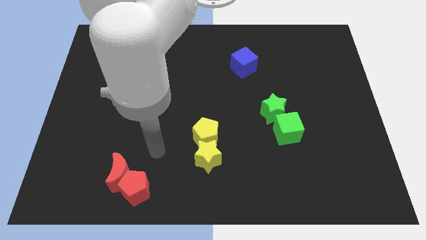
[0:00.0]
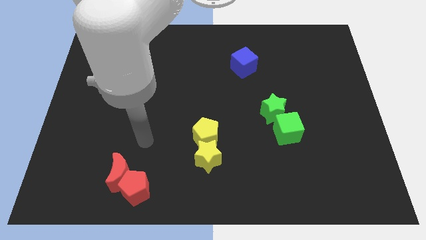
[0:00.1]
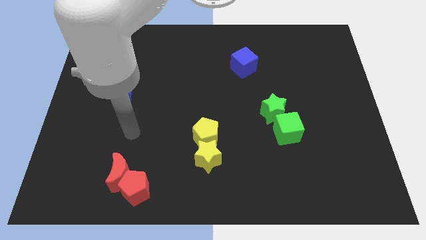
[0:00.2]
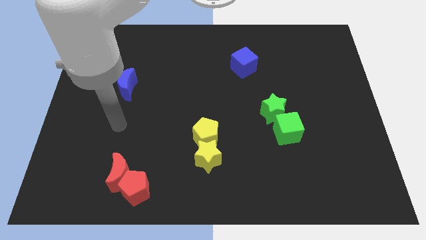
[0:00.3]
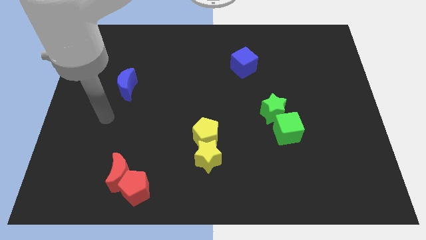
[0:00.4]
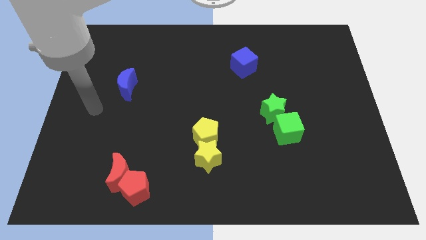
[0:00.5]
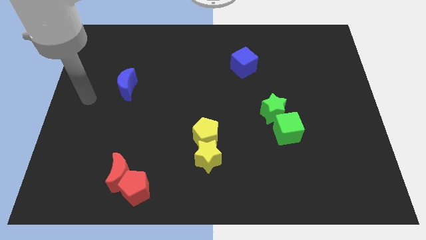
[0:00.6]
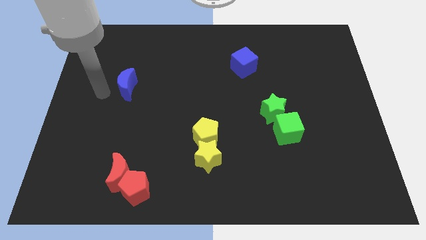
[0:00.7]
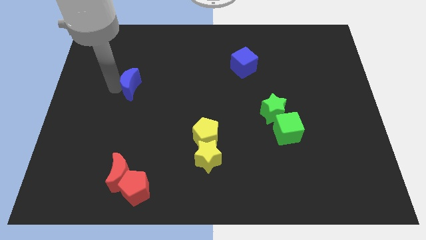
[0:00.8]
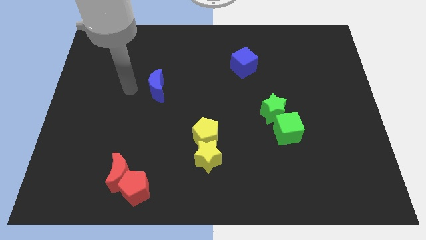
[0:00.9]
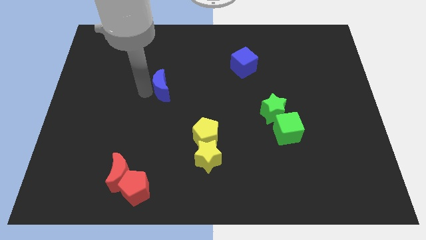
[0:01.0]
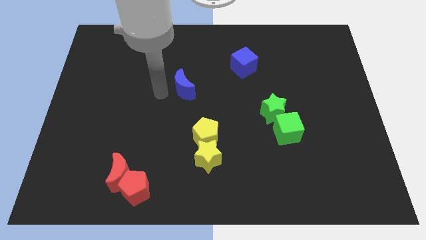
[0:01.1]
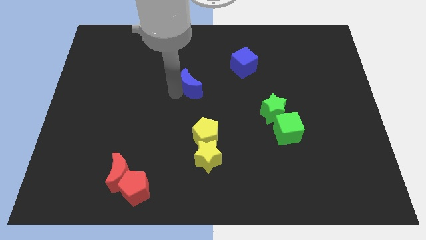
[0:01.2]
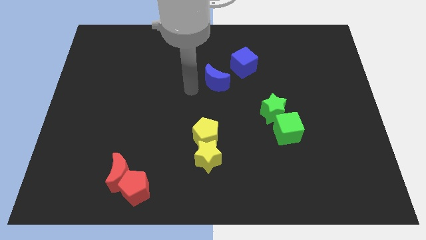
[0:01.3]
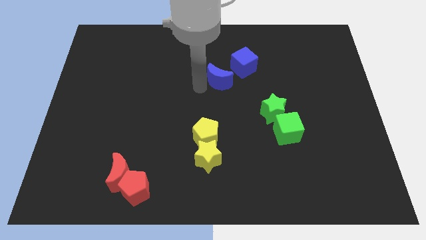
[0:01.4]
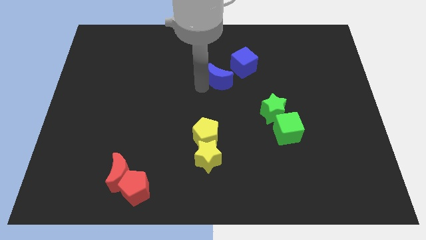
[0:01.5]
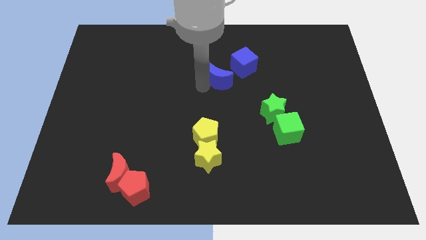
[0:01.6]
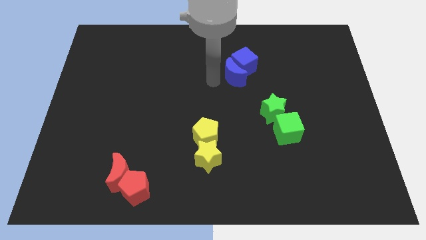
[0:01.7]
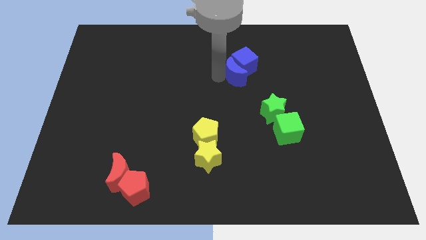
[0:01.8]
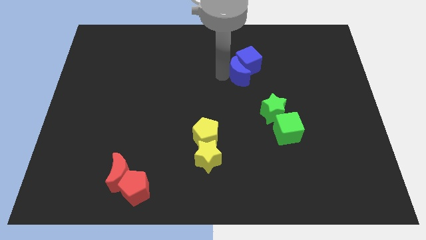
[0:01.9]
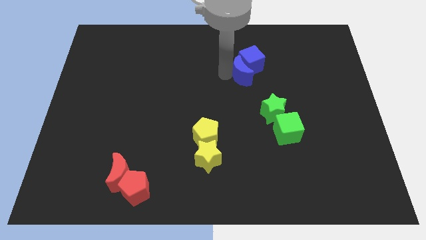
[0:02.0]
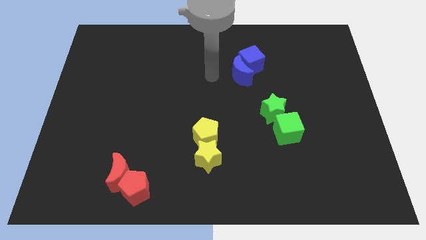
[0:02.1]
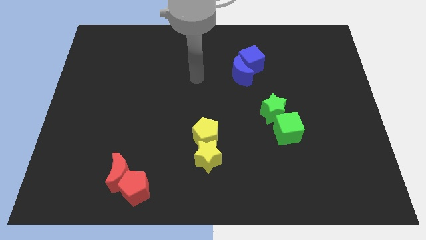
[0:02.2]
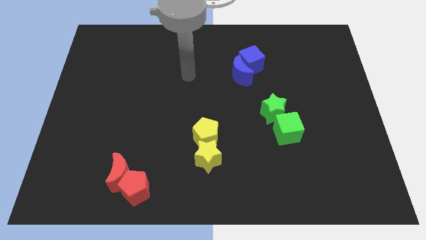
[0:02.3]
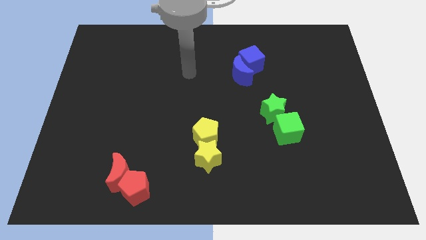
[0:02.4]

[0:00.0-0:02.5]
move the blue moon towards the blue cube

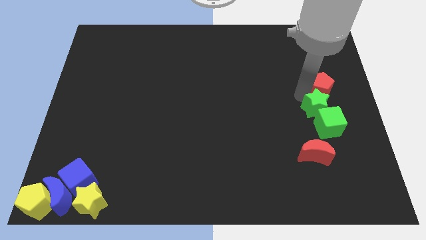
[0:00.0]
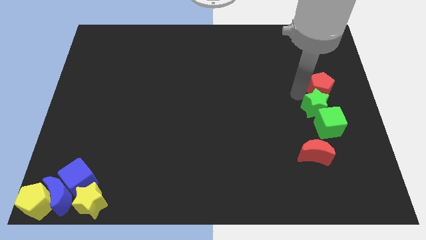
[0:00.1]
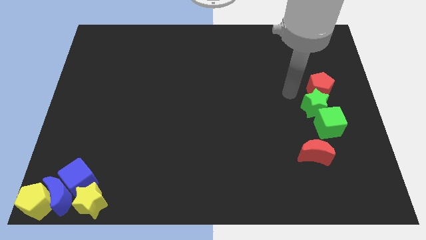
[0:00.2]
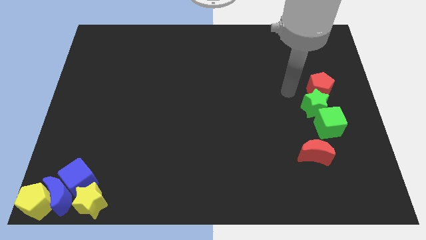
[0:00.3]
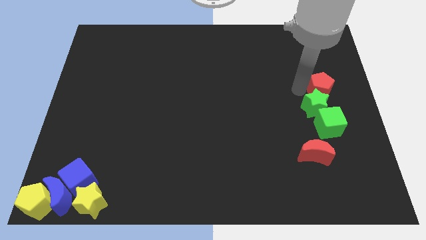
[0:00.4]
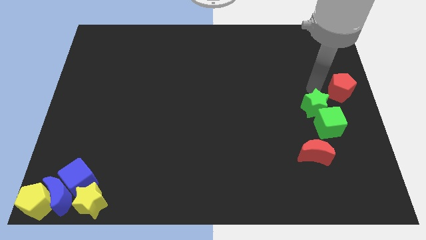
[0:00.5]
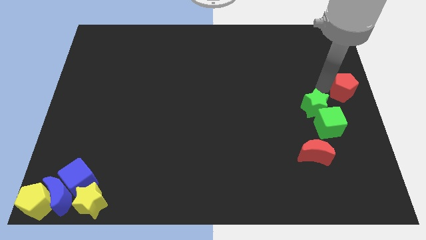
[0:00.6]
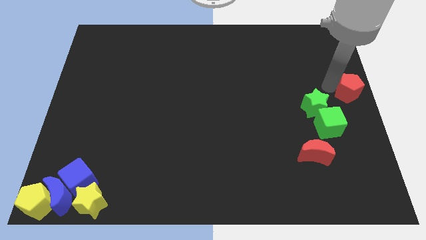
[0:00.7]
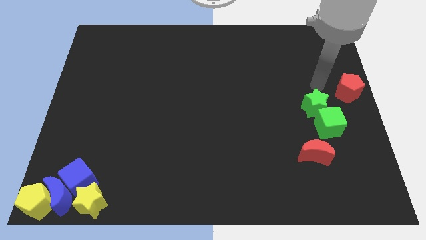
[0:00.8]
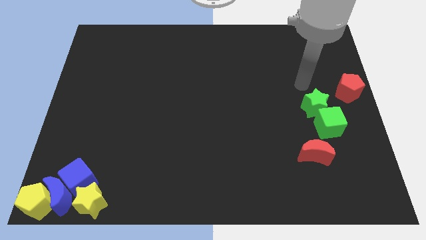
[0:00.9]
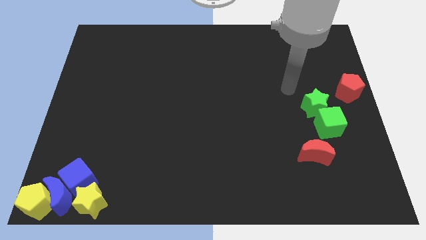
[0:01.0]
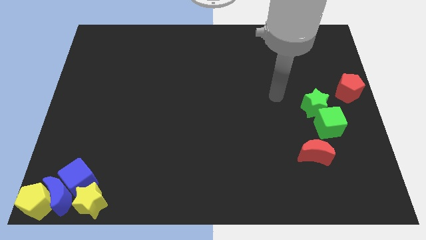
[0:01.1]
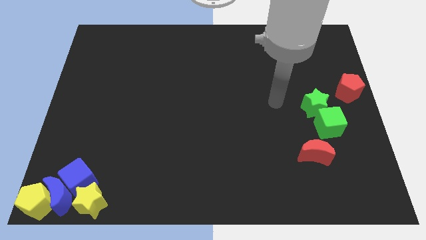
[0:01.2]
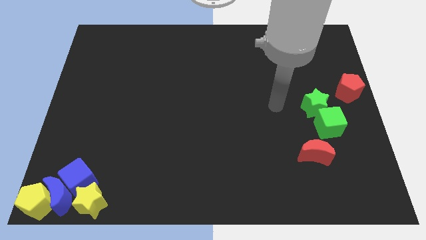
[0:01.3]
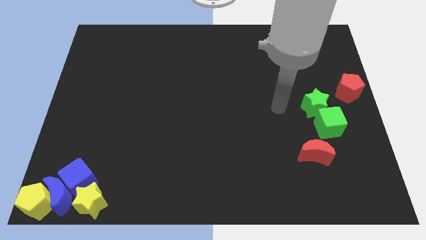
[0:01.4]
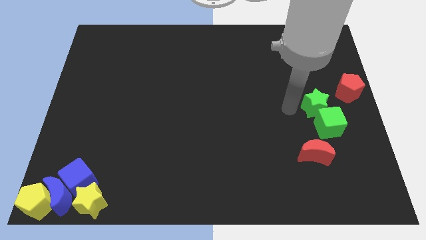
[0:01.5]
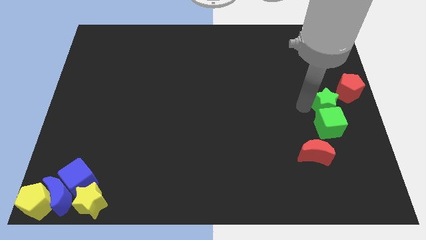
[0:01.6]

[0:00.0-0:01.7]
move the red pentagon to the centre right of the board

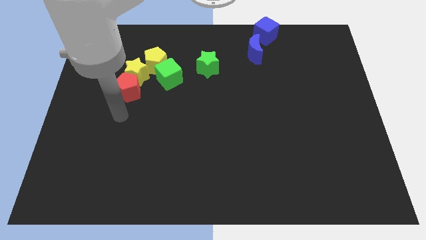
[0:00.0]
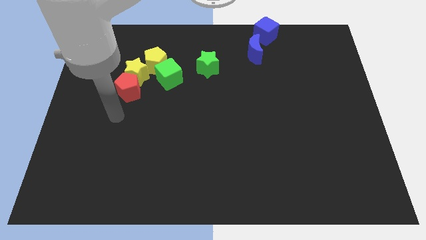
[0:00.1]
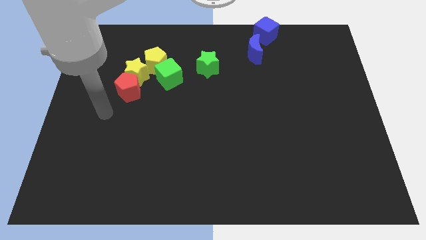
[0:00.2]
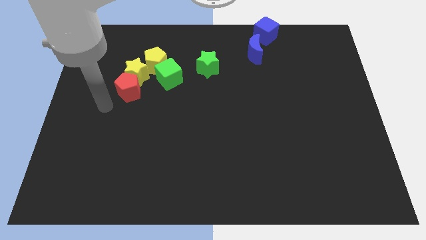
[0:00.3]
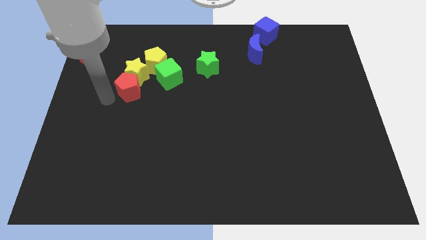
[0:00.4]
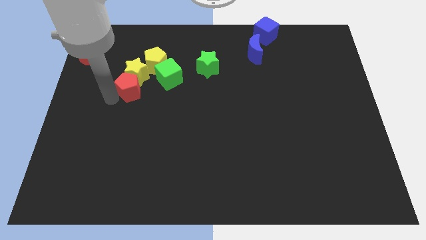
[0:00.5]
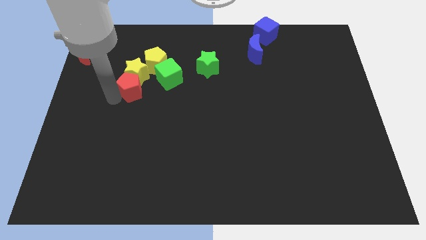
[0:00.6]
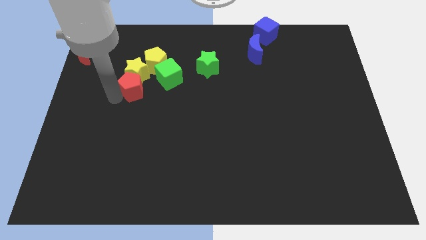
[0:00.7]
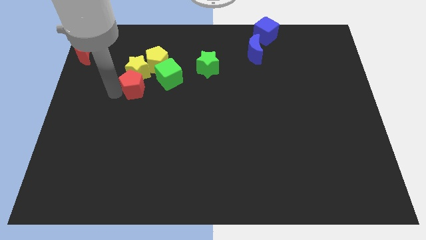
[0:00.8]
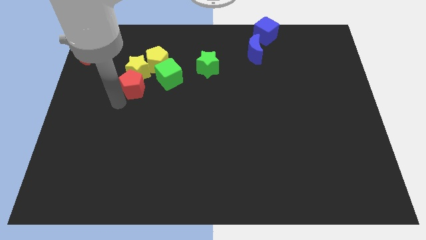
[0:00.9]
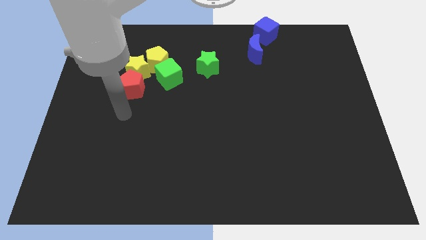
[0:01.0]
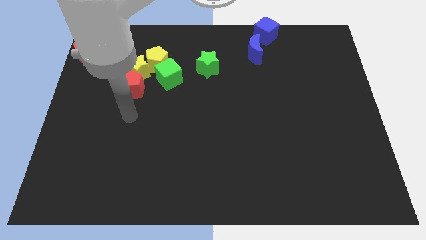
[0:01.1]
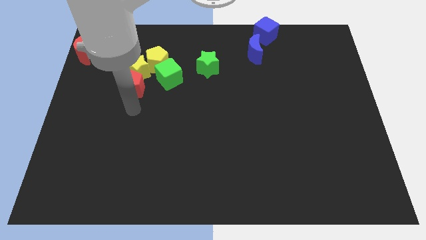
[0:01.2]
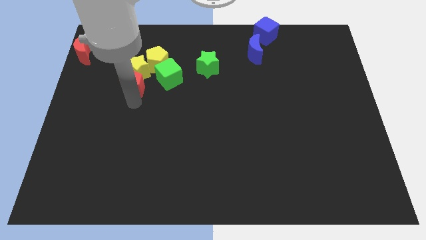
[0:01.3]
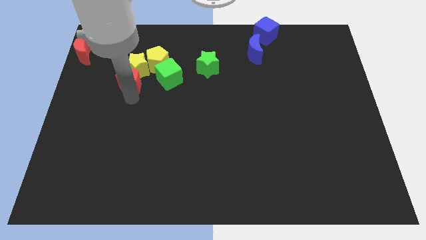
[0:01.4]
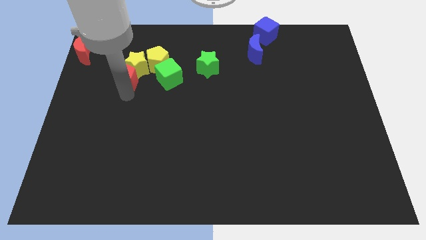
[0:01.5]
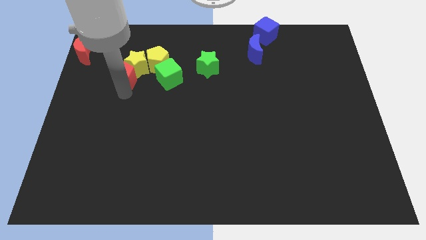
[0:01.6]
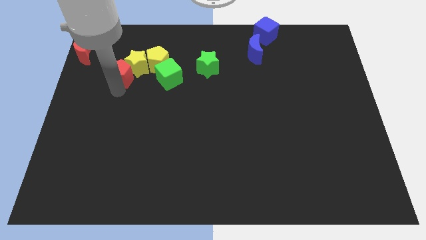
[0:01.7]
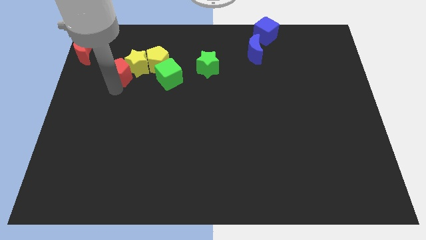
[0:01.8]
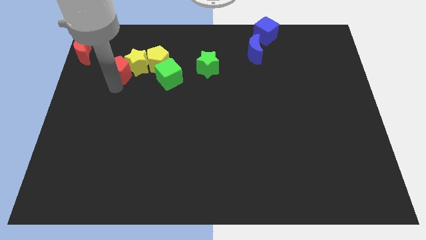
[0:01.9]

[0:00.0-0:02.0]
push the red pentagon into the yellow star

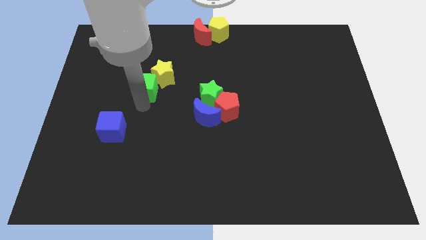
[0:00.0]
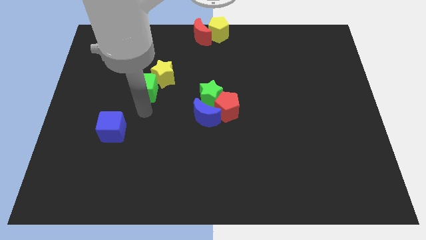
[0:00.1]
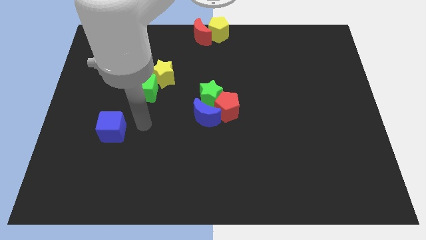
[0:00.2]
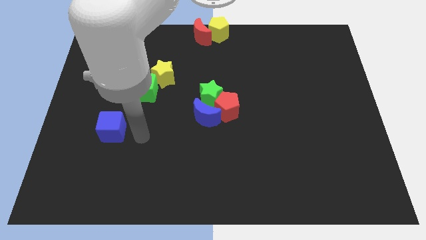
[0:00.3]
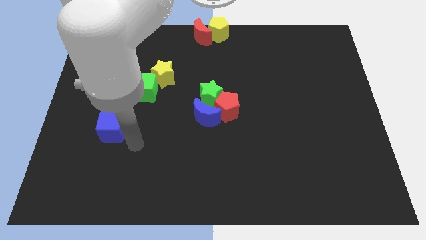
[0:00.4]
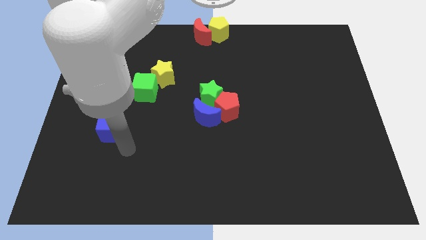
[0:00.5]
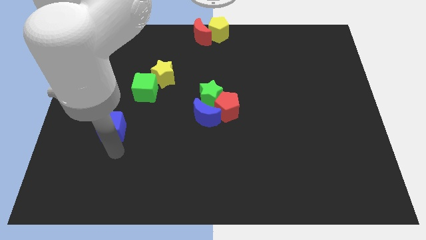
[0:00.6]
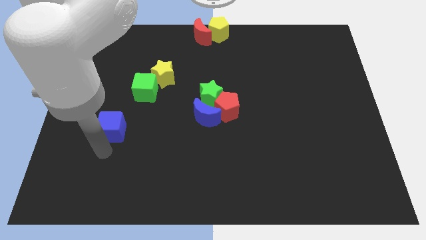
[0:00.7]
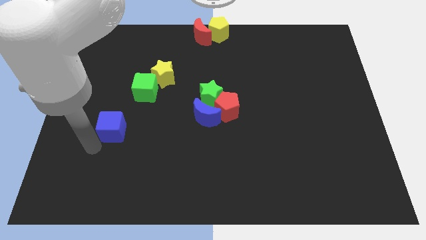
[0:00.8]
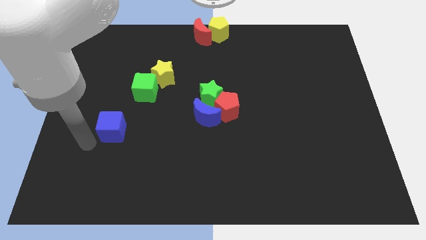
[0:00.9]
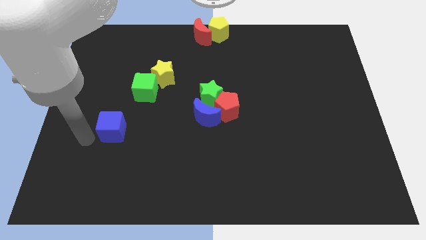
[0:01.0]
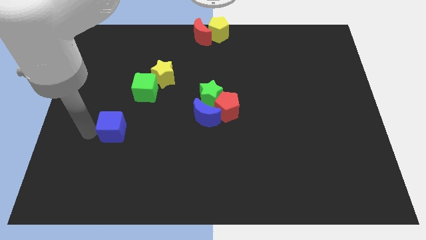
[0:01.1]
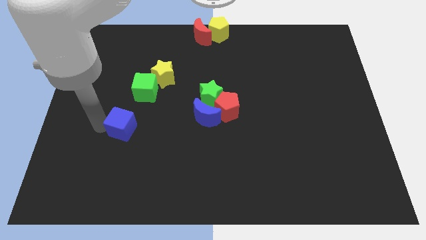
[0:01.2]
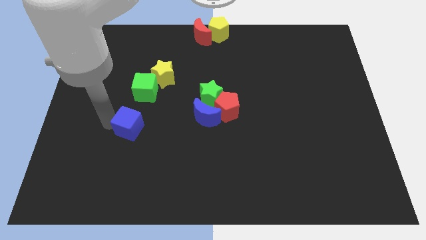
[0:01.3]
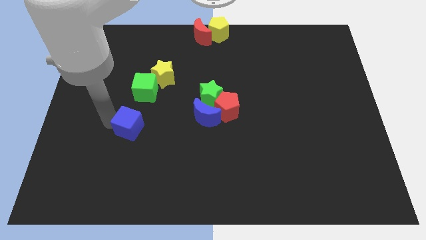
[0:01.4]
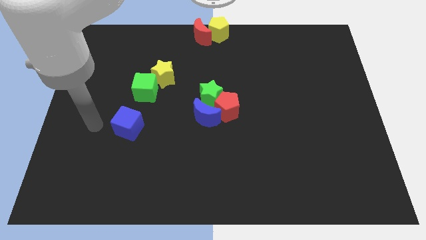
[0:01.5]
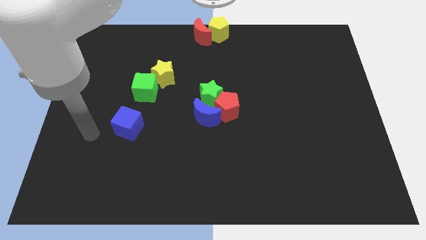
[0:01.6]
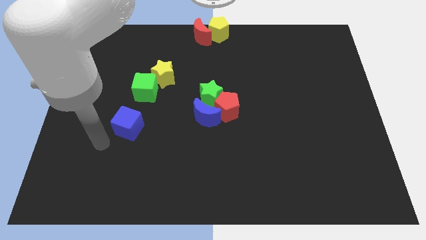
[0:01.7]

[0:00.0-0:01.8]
move your arm away from green cube

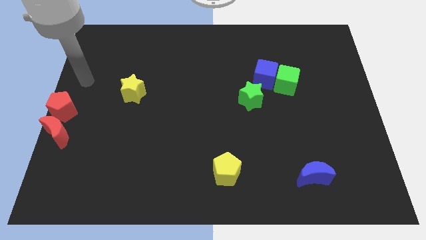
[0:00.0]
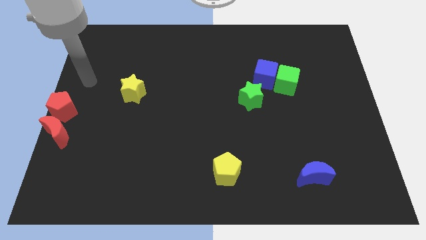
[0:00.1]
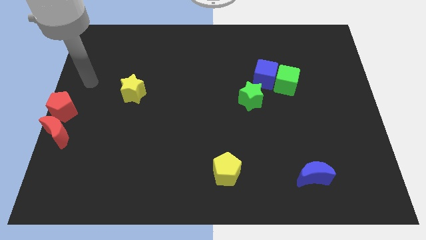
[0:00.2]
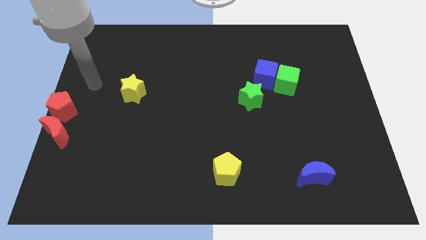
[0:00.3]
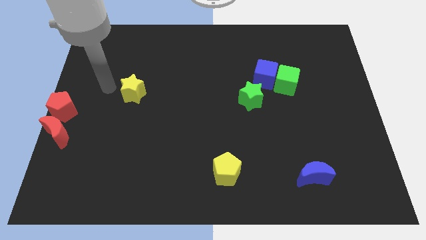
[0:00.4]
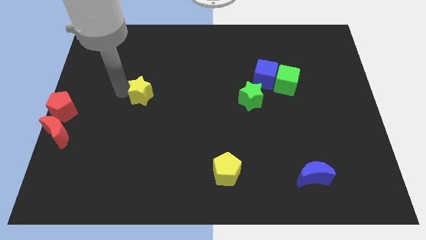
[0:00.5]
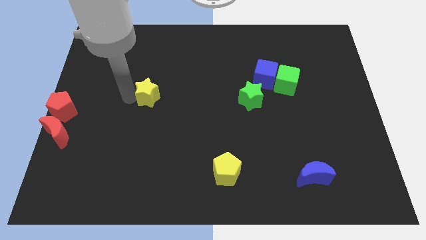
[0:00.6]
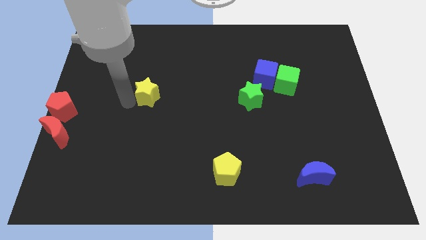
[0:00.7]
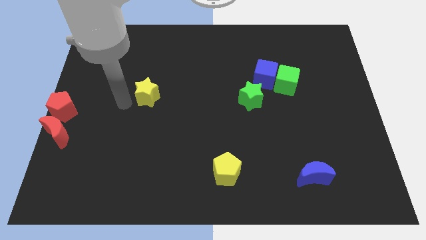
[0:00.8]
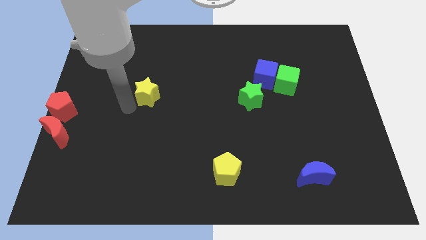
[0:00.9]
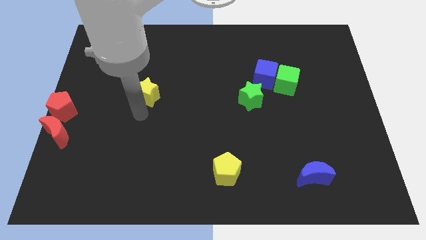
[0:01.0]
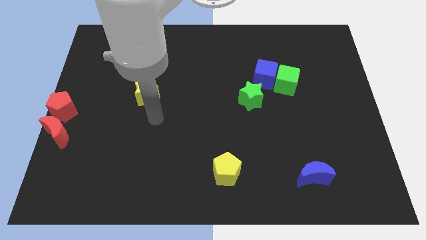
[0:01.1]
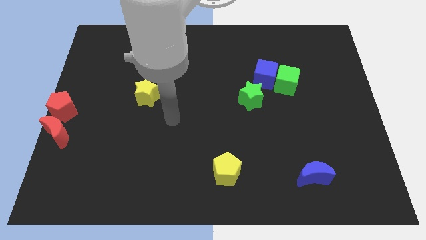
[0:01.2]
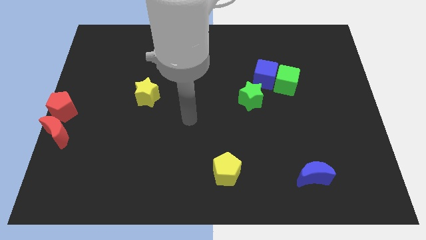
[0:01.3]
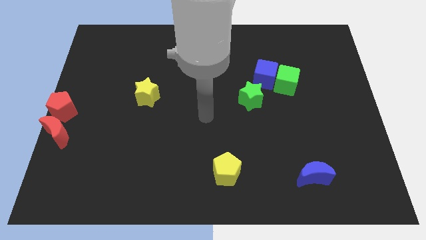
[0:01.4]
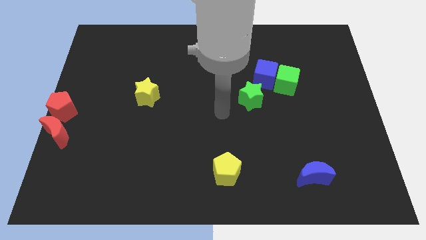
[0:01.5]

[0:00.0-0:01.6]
slide the yellow star slightly to the right
